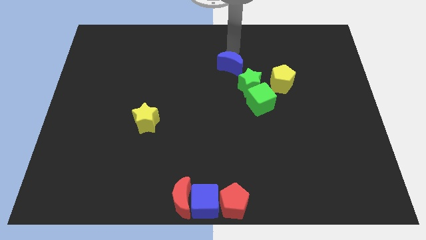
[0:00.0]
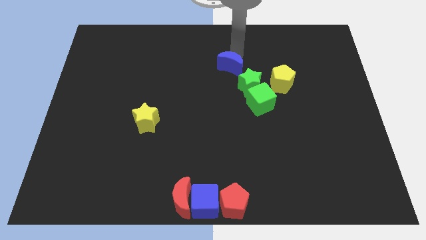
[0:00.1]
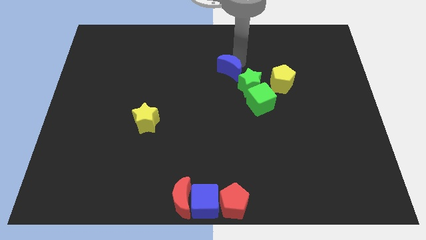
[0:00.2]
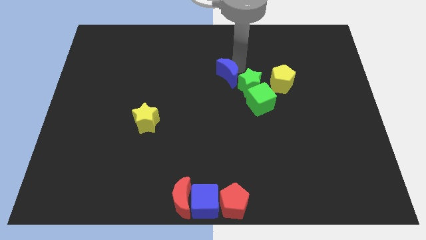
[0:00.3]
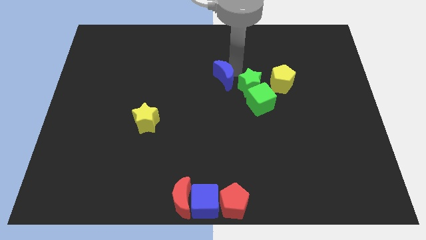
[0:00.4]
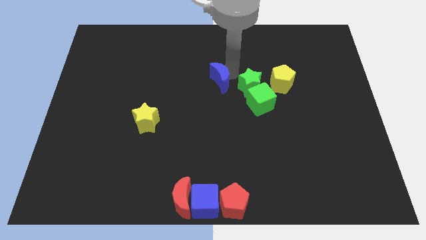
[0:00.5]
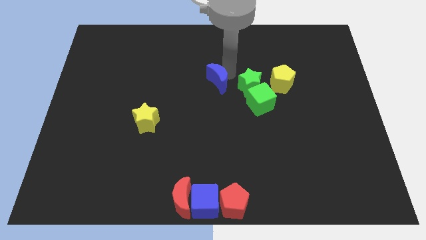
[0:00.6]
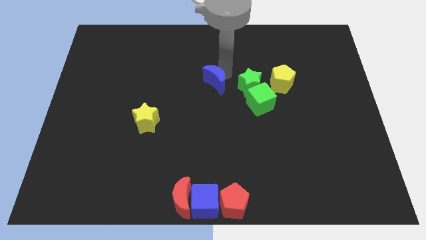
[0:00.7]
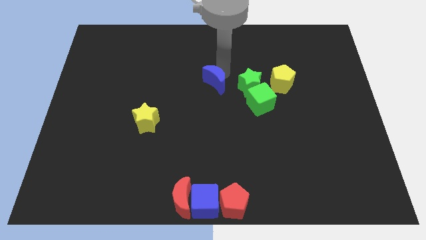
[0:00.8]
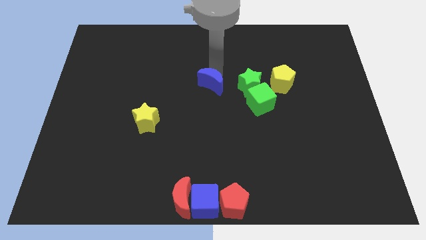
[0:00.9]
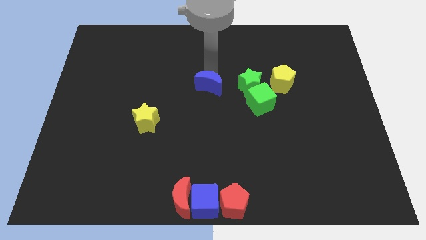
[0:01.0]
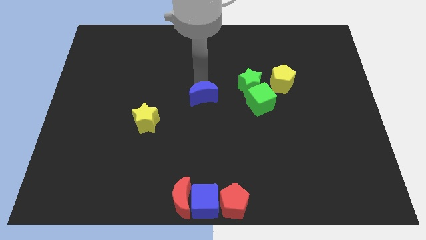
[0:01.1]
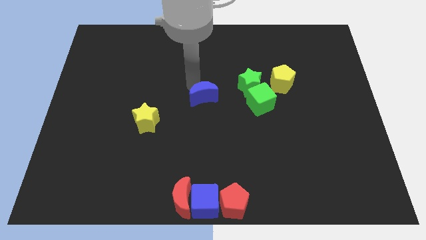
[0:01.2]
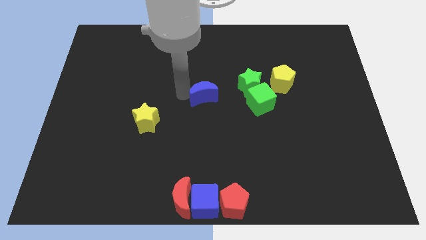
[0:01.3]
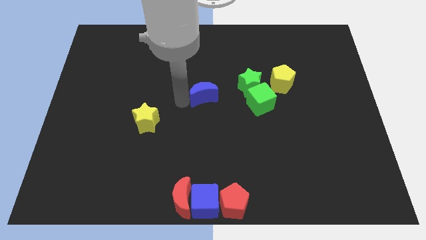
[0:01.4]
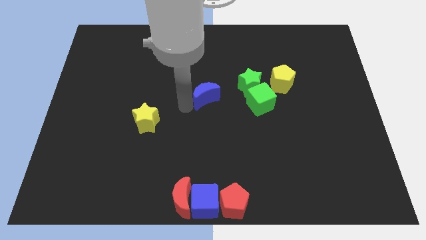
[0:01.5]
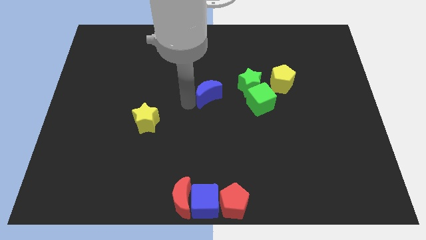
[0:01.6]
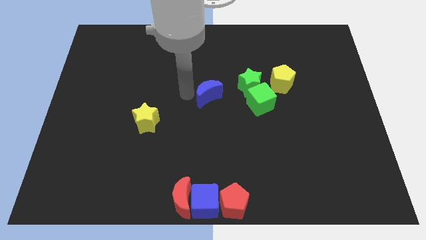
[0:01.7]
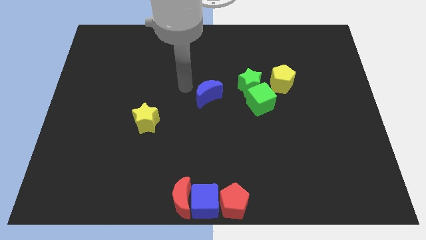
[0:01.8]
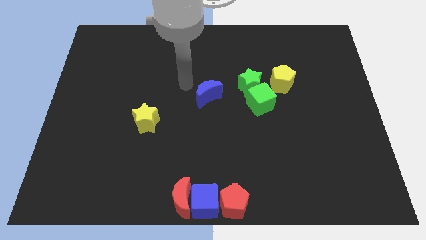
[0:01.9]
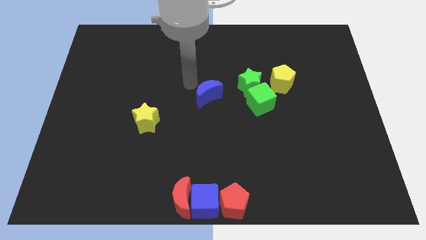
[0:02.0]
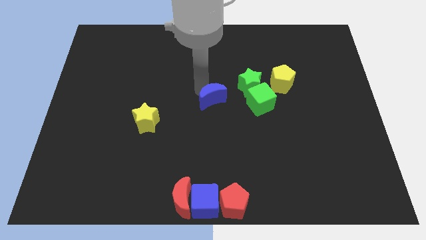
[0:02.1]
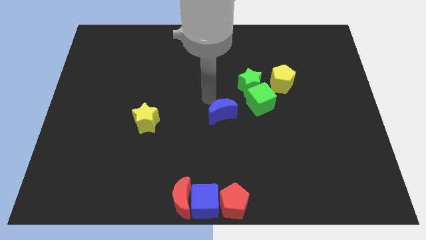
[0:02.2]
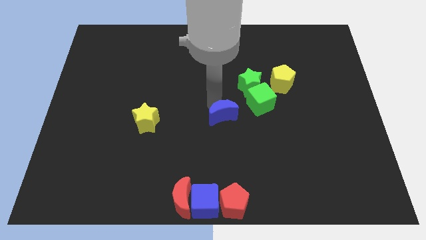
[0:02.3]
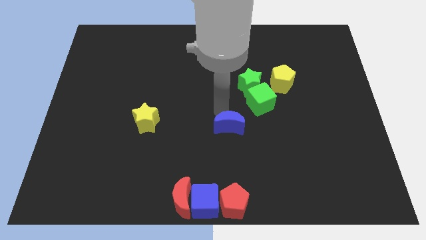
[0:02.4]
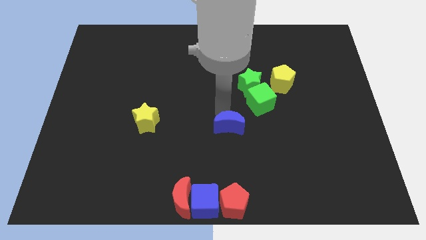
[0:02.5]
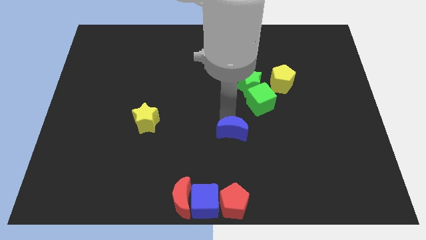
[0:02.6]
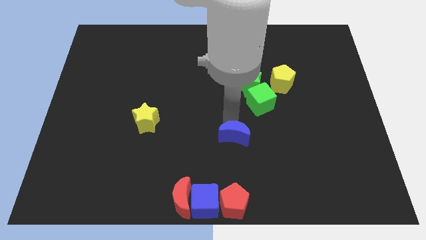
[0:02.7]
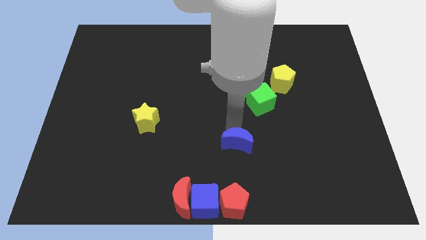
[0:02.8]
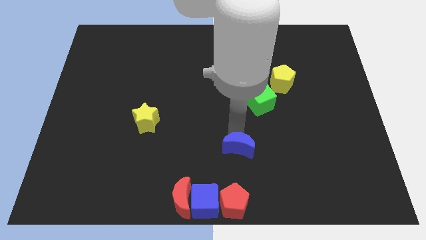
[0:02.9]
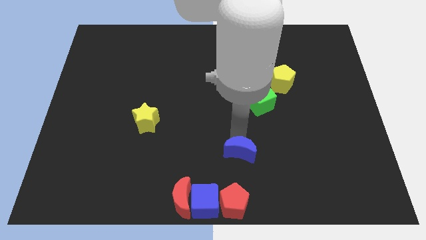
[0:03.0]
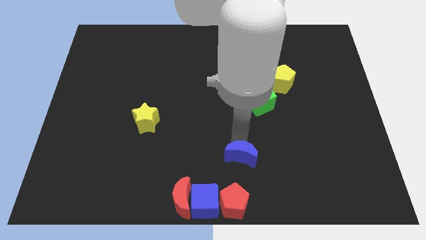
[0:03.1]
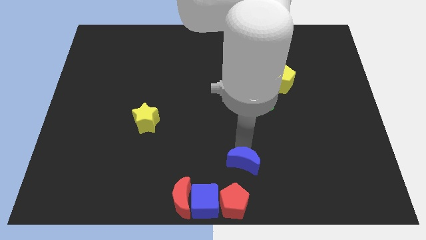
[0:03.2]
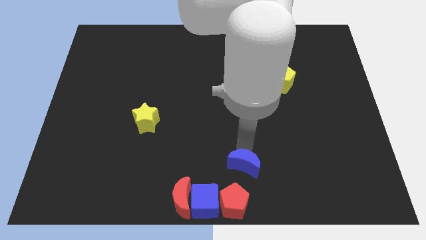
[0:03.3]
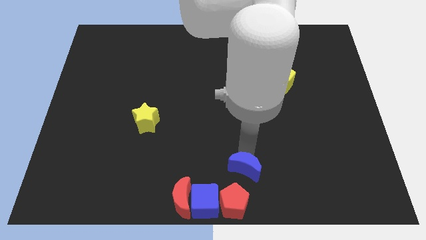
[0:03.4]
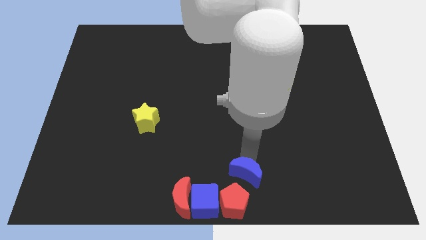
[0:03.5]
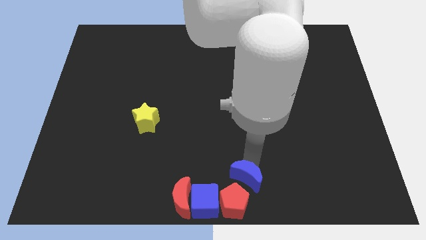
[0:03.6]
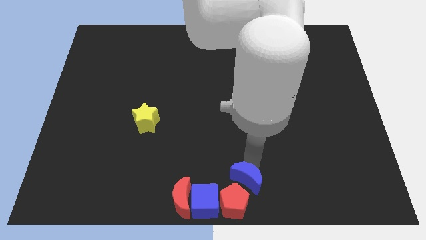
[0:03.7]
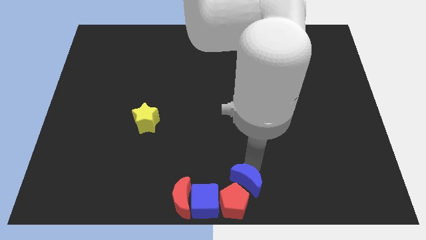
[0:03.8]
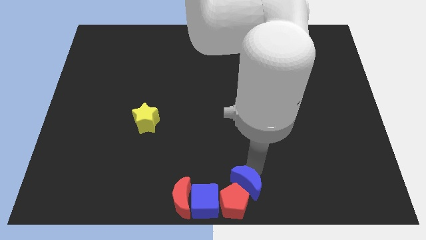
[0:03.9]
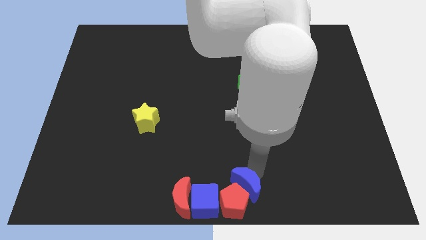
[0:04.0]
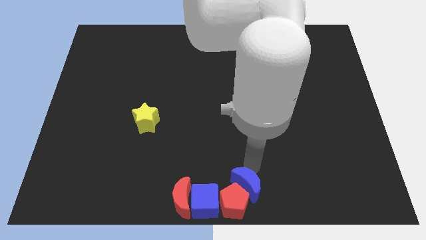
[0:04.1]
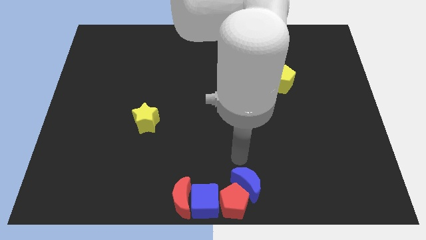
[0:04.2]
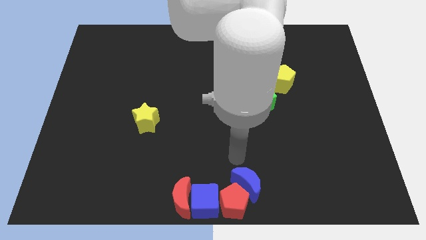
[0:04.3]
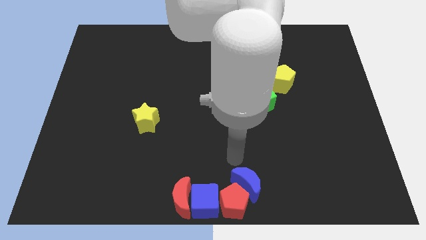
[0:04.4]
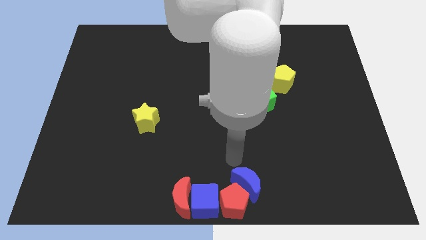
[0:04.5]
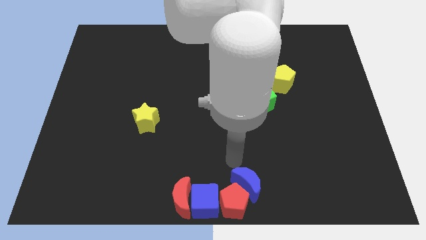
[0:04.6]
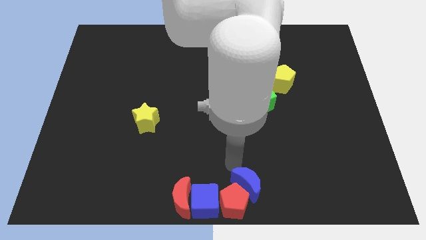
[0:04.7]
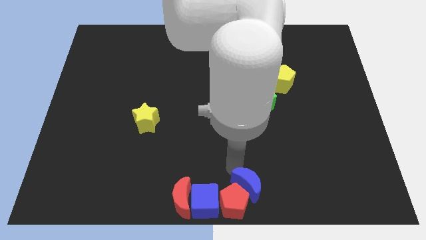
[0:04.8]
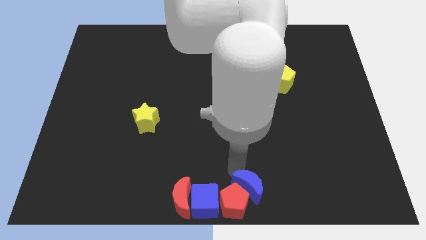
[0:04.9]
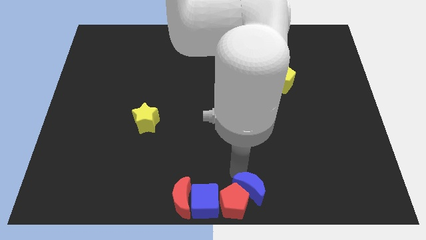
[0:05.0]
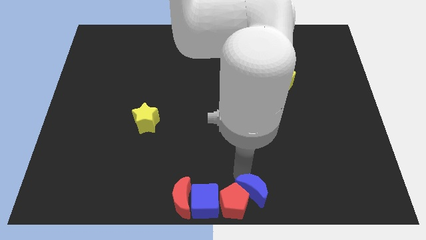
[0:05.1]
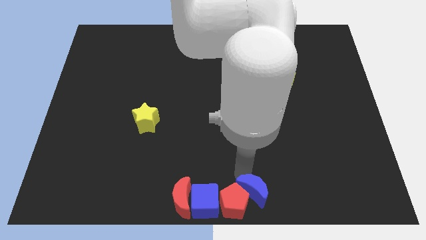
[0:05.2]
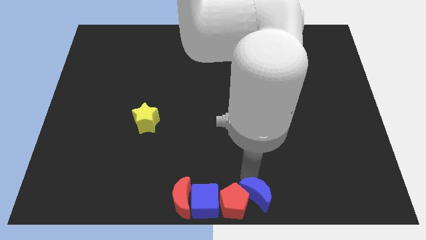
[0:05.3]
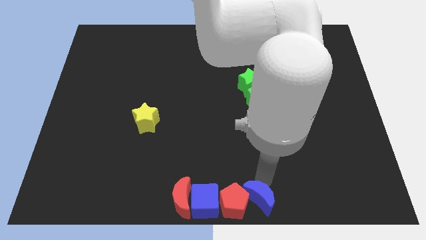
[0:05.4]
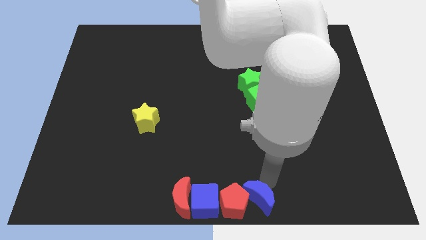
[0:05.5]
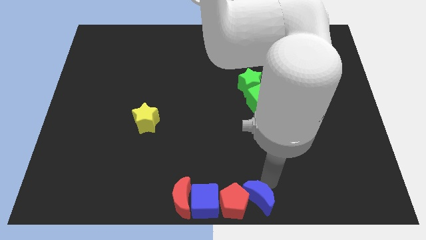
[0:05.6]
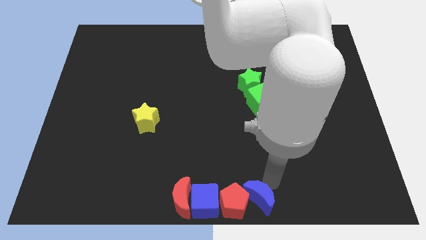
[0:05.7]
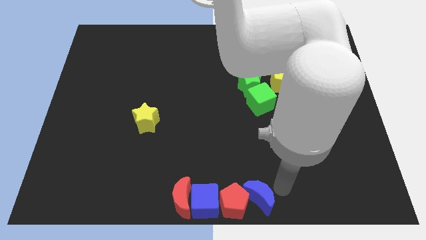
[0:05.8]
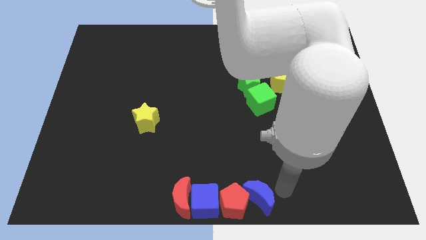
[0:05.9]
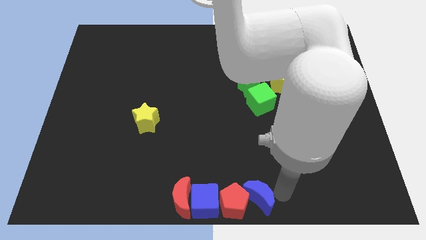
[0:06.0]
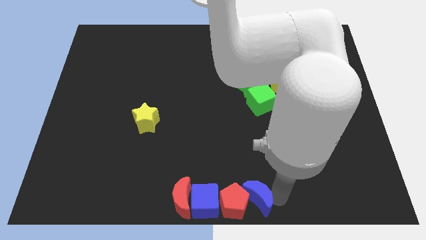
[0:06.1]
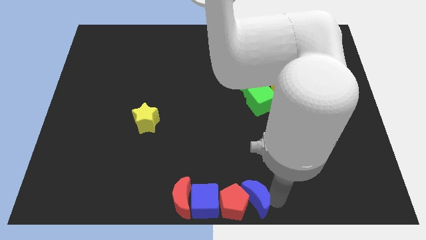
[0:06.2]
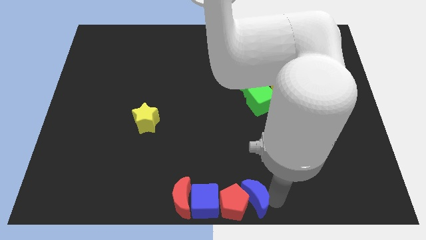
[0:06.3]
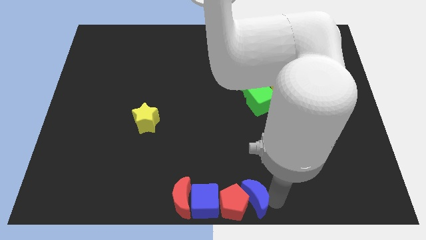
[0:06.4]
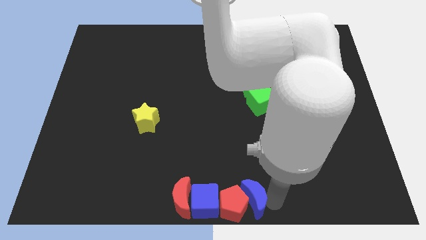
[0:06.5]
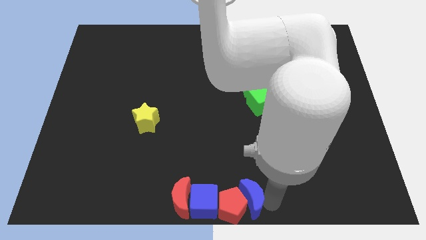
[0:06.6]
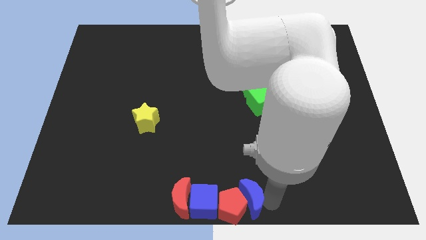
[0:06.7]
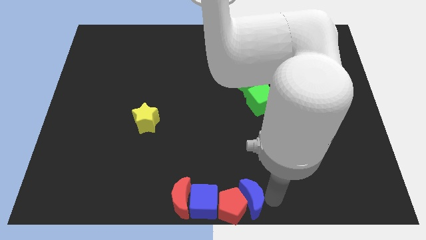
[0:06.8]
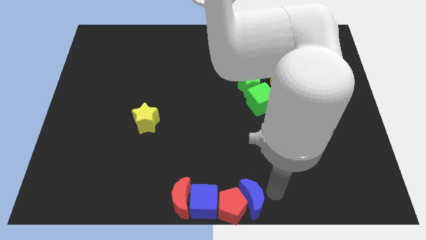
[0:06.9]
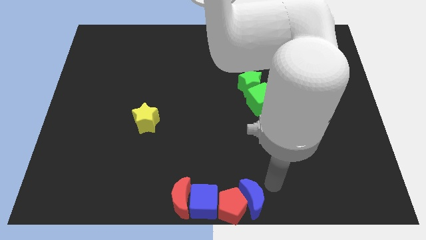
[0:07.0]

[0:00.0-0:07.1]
push blue moon to the bottom center

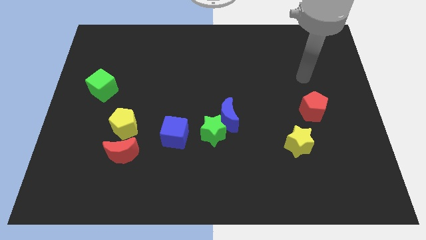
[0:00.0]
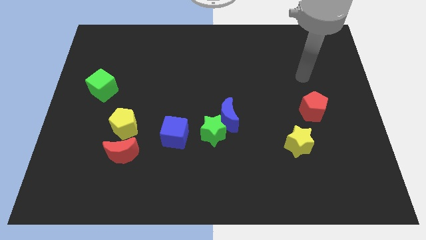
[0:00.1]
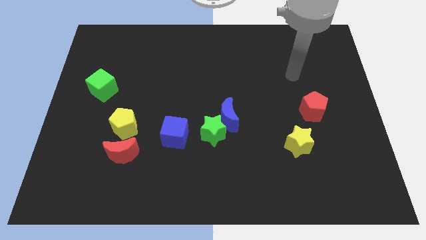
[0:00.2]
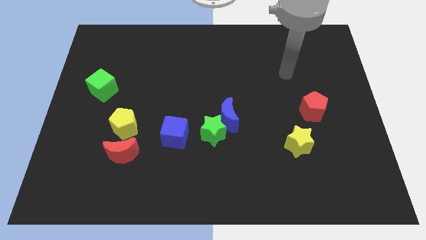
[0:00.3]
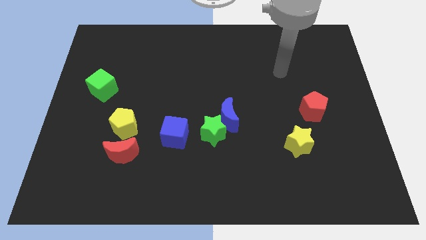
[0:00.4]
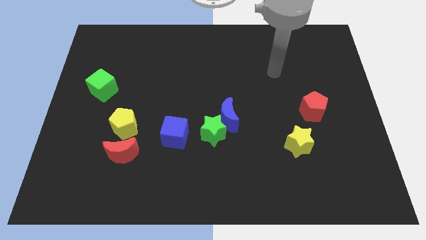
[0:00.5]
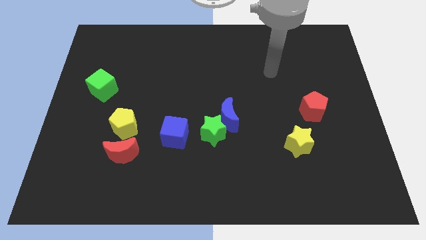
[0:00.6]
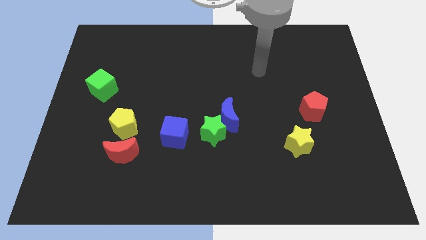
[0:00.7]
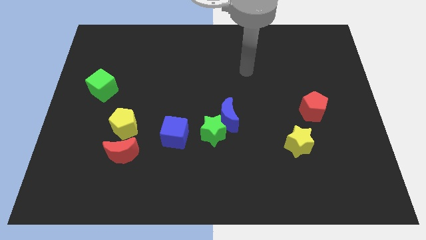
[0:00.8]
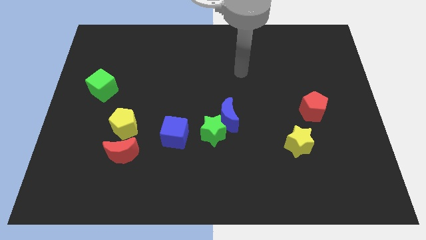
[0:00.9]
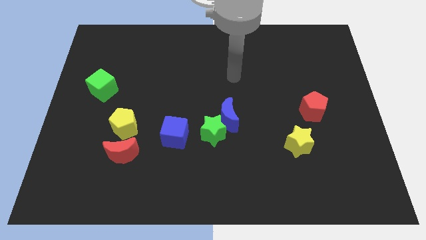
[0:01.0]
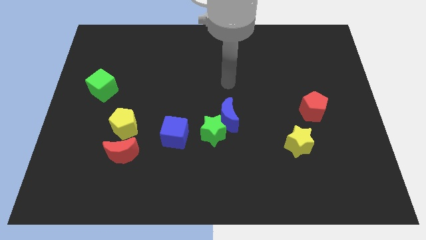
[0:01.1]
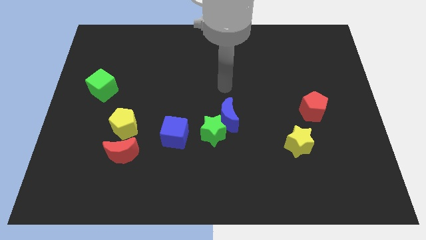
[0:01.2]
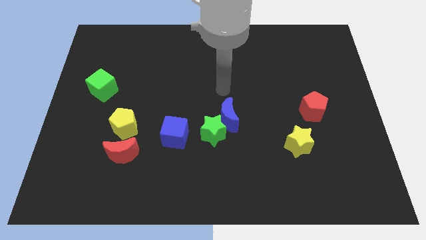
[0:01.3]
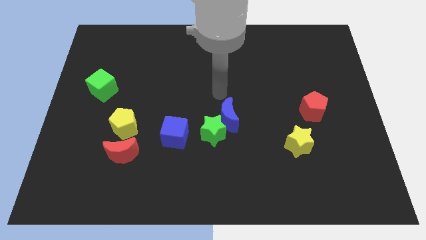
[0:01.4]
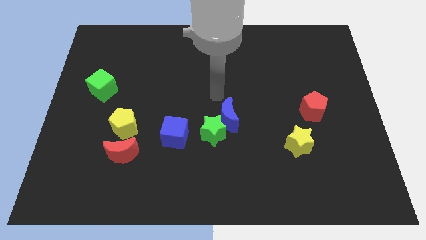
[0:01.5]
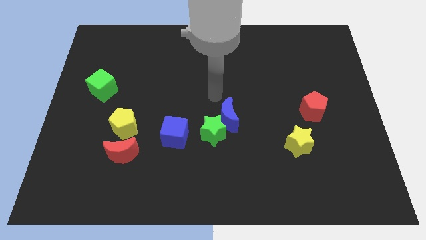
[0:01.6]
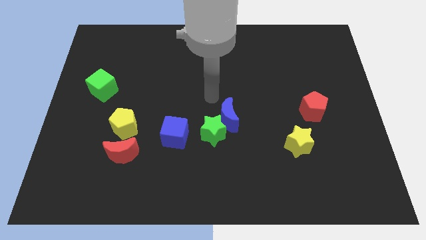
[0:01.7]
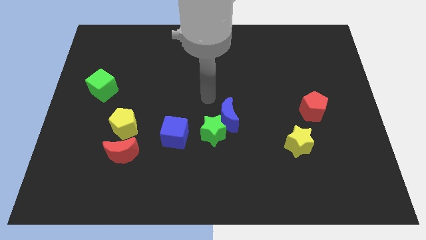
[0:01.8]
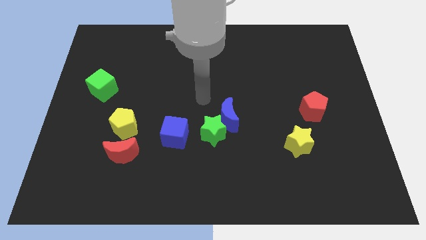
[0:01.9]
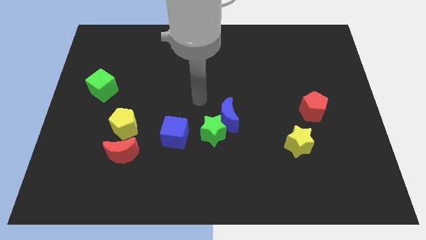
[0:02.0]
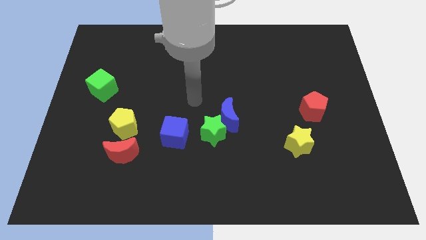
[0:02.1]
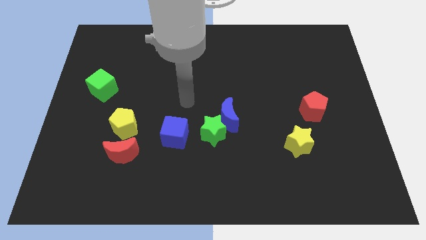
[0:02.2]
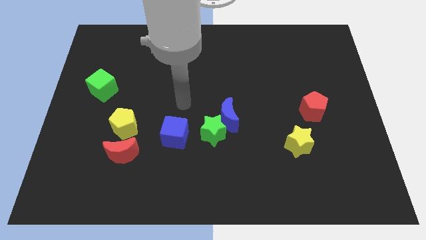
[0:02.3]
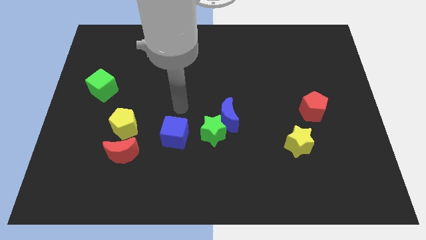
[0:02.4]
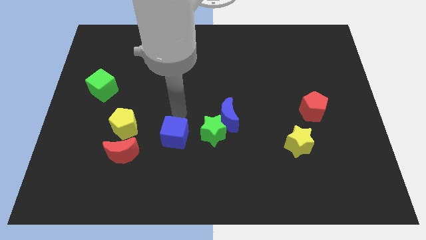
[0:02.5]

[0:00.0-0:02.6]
point your arm at the top of the blue cube
